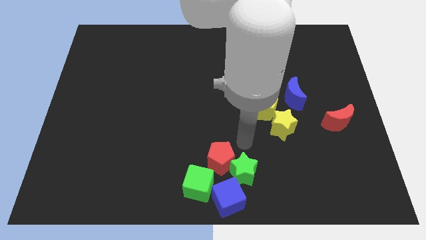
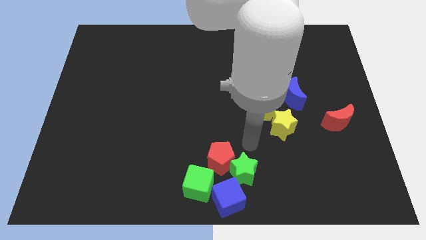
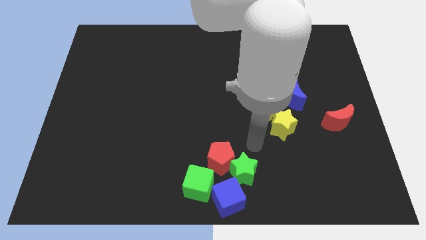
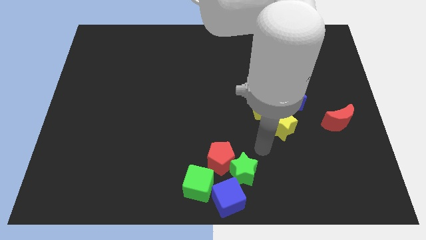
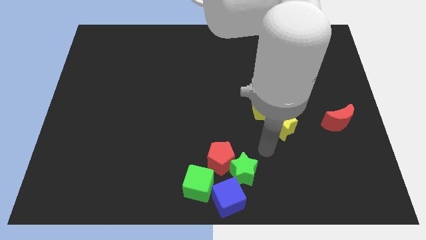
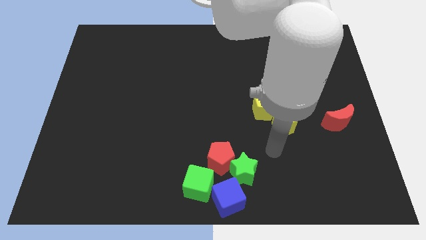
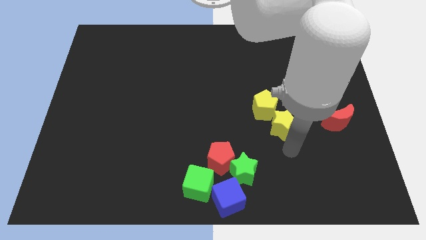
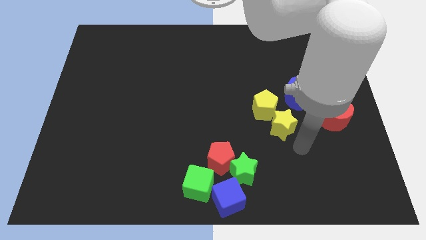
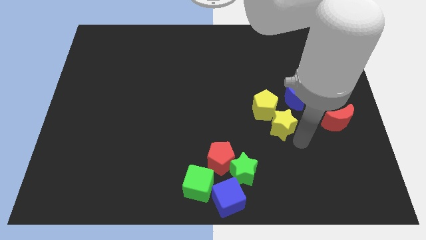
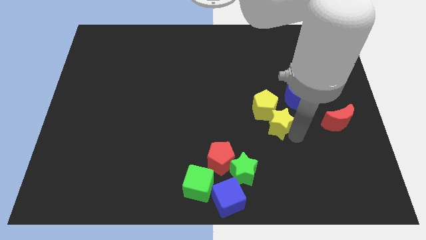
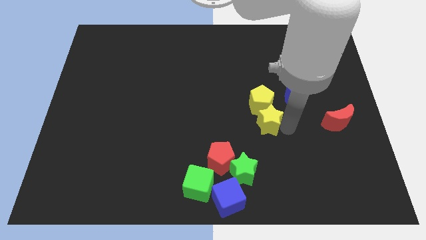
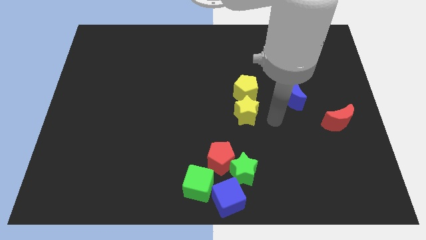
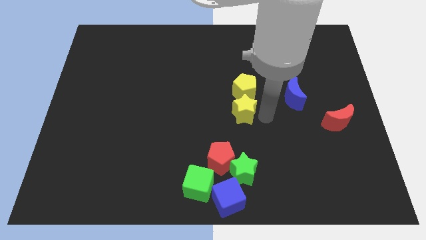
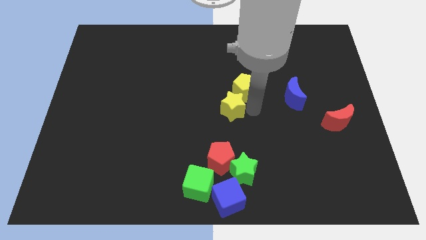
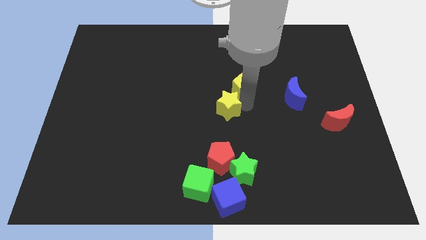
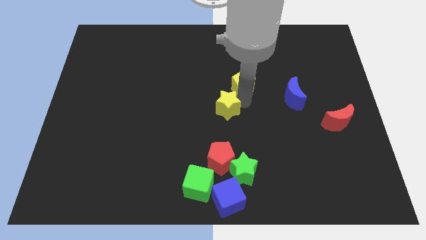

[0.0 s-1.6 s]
push the yellow star into the yellow pentagon

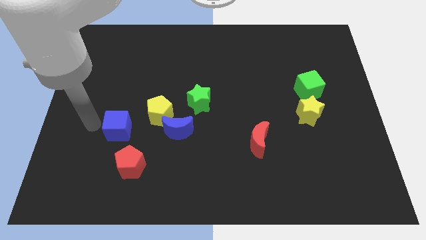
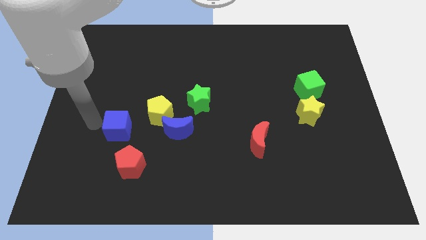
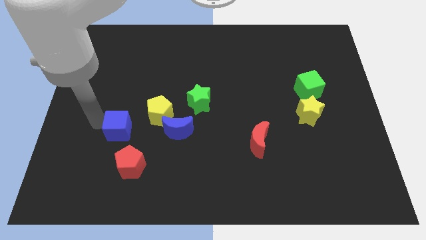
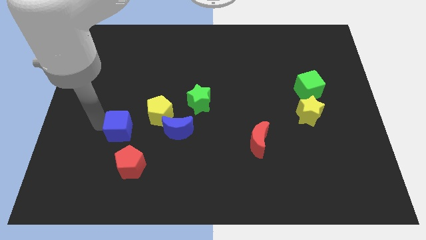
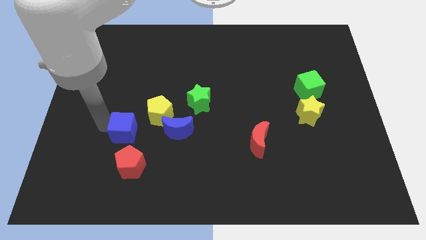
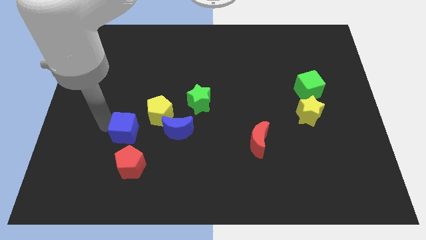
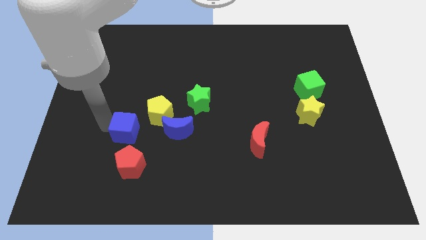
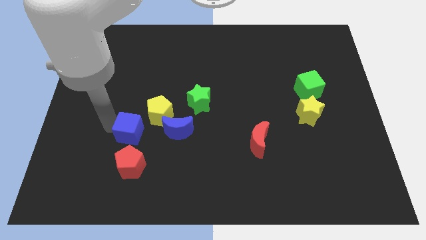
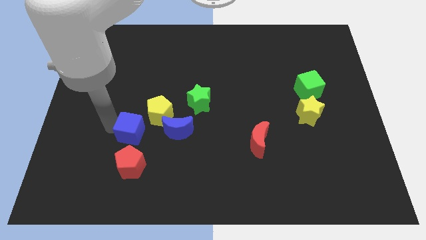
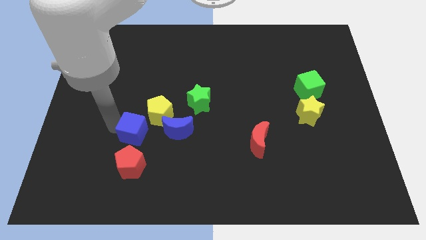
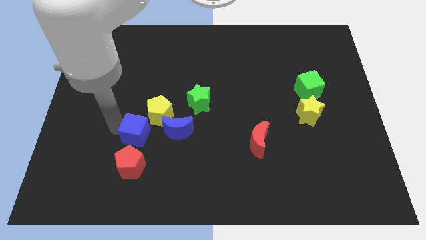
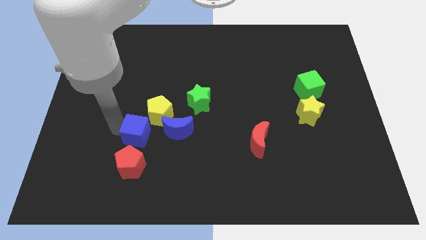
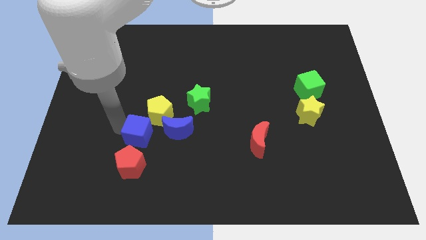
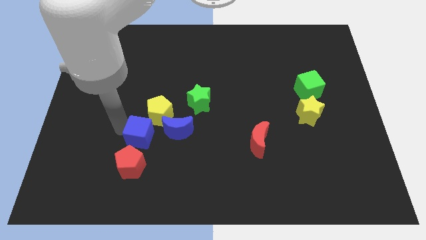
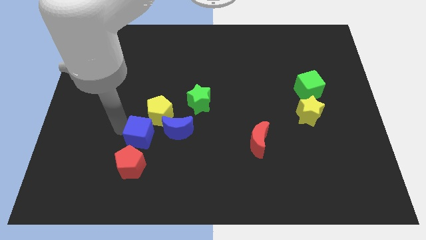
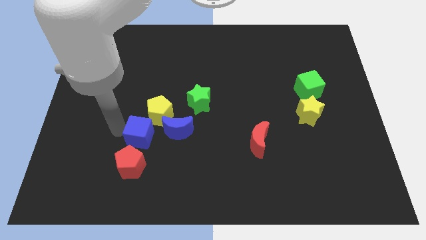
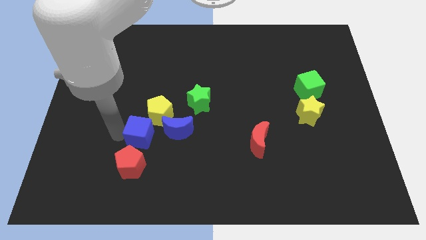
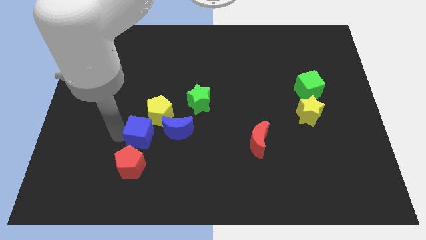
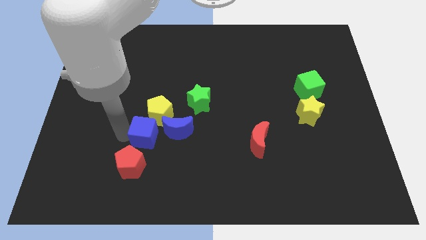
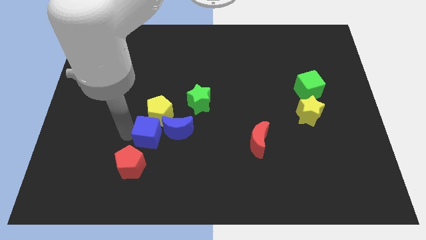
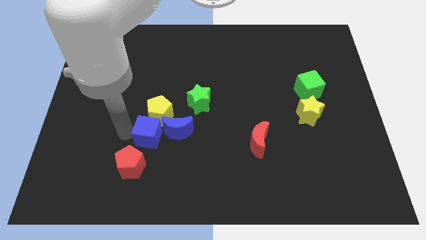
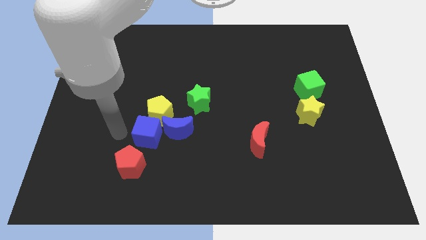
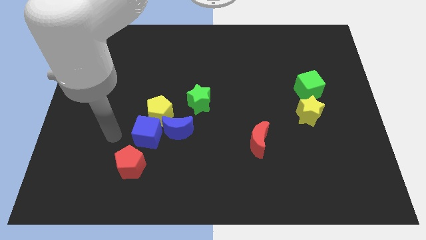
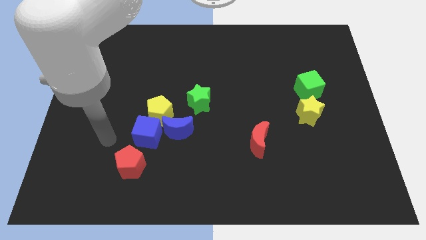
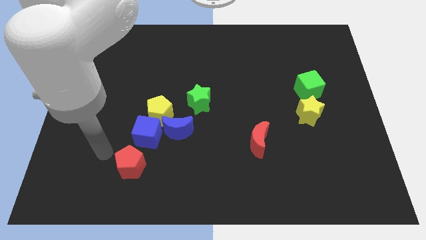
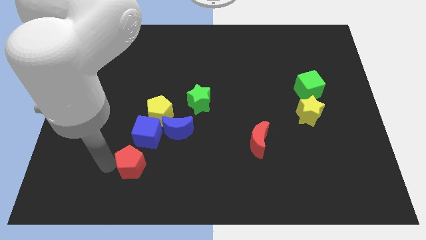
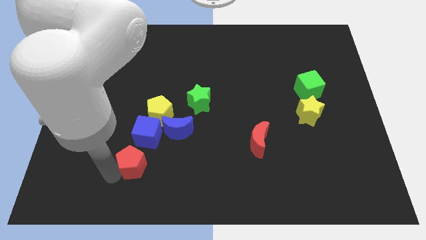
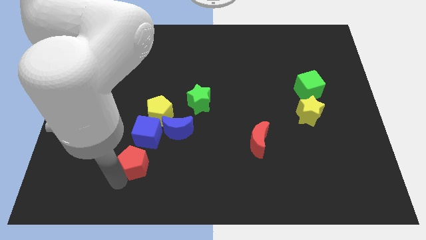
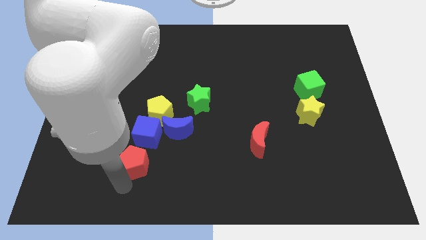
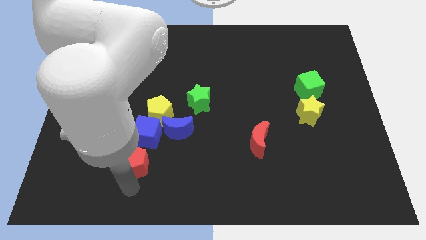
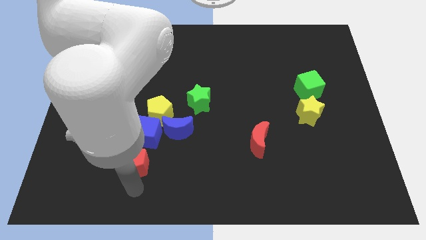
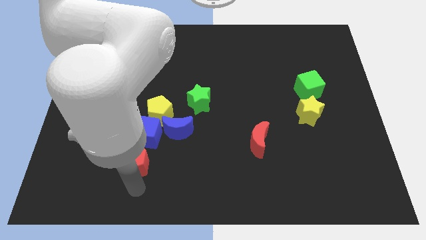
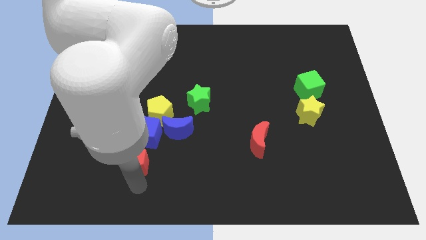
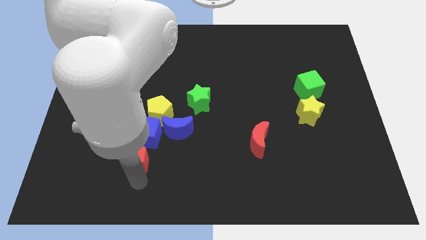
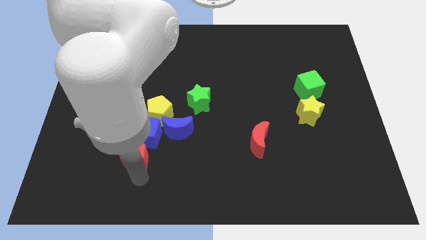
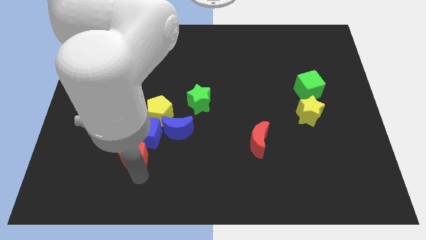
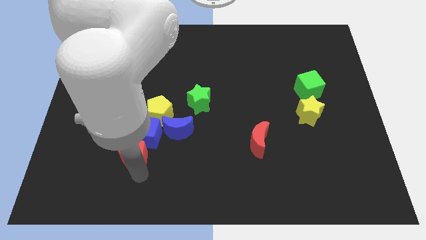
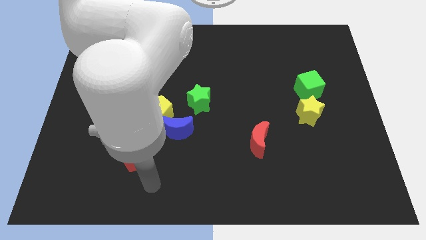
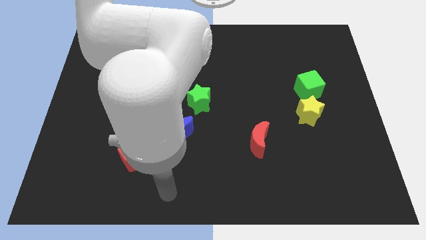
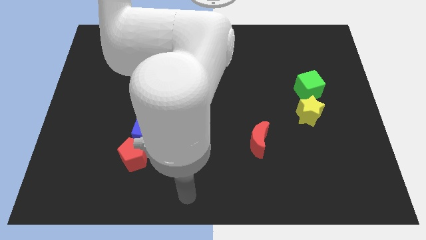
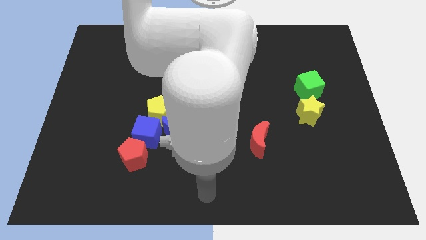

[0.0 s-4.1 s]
adjust the blue cube and red pentagon diagonally on the bottom left side of the yellow pentagon

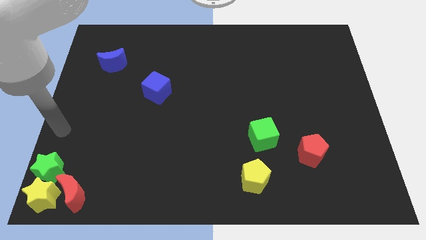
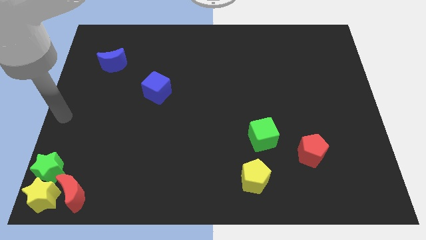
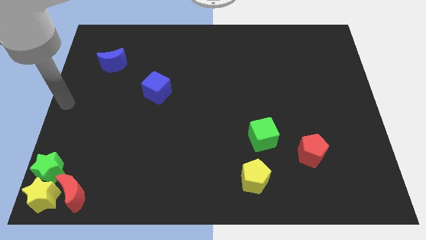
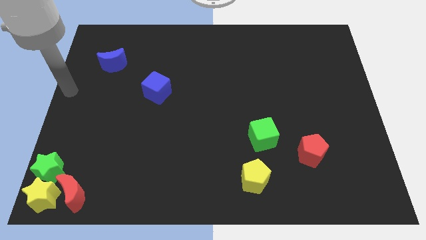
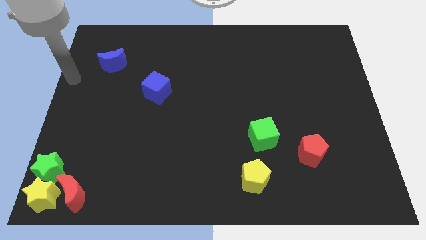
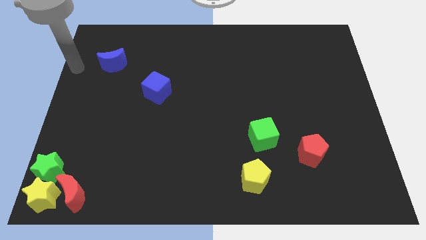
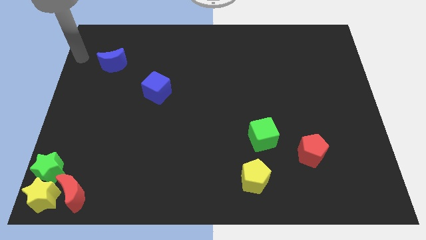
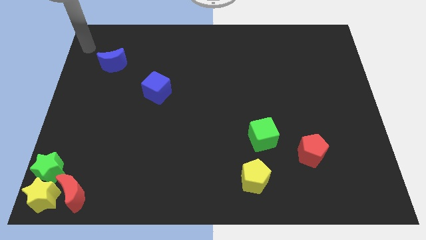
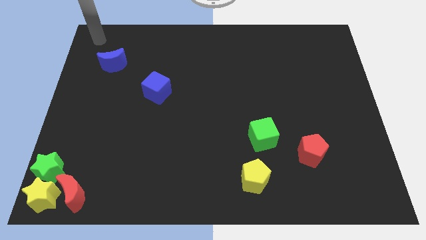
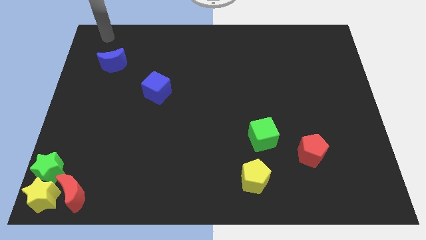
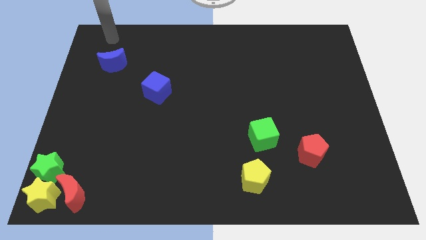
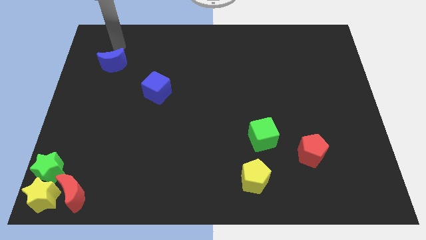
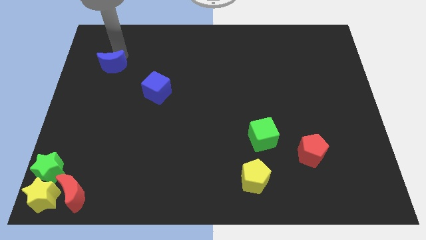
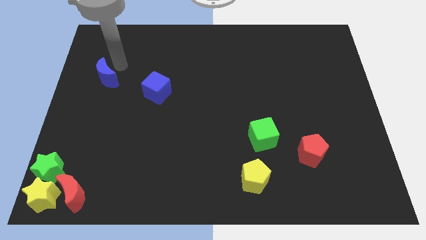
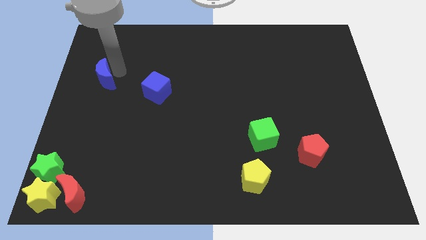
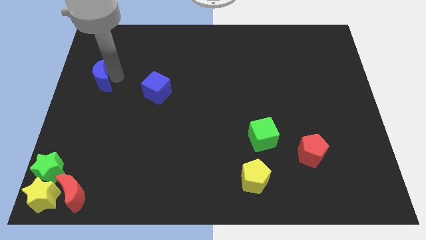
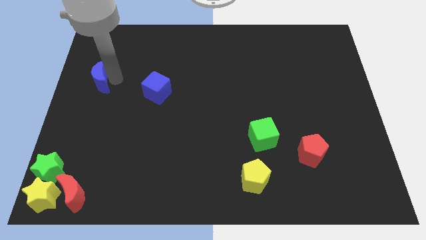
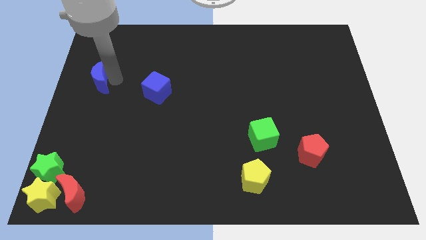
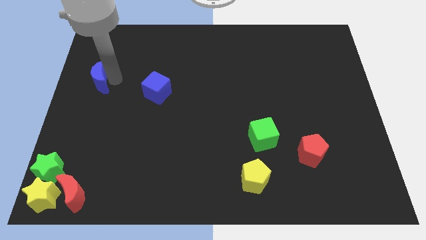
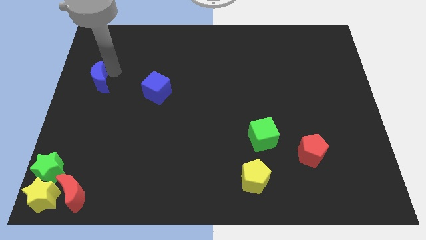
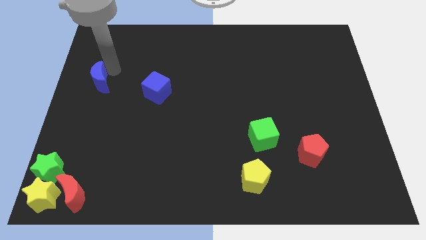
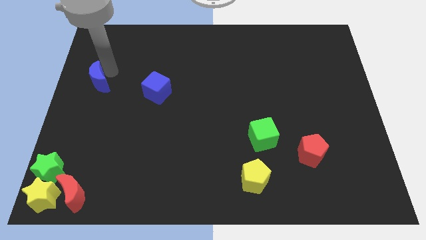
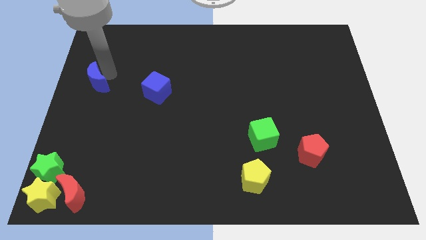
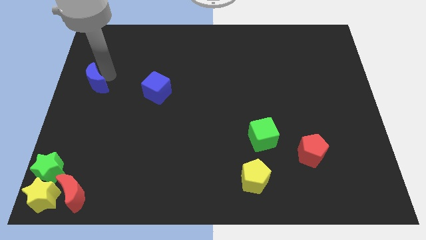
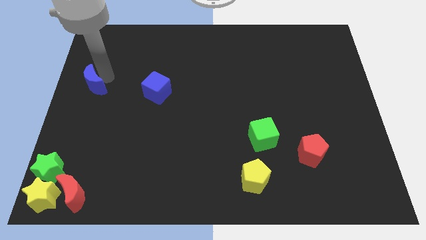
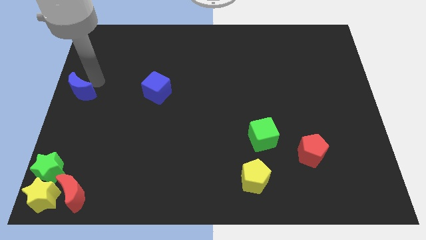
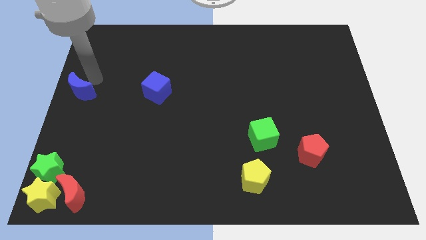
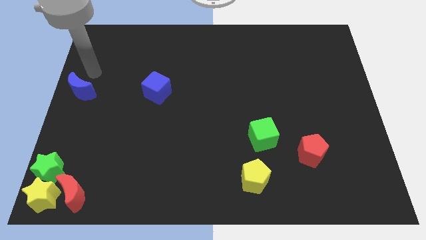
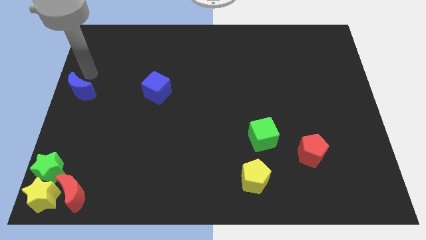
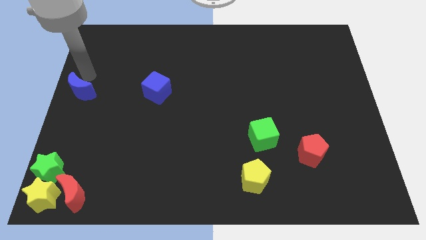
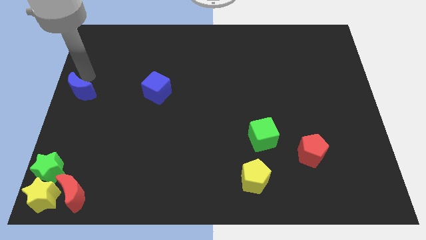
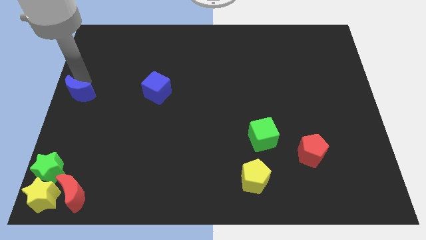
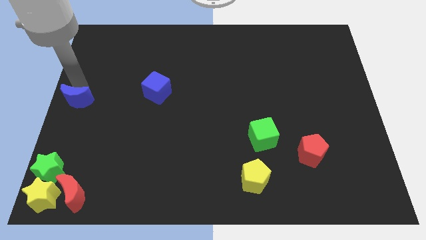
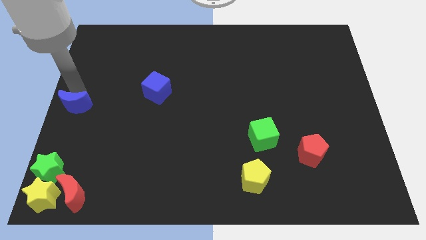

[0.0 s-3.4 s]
slide the blue crescent towards the bottom left corner of the board
